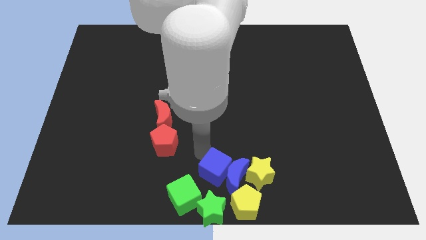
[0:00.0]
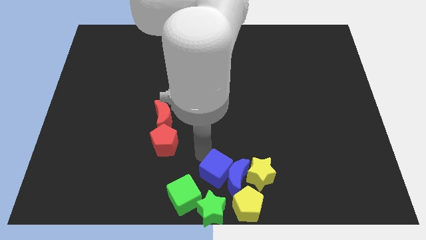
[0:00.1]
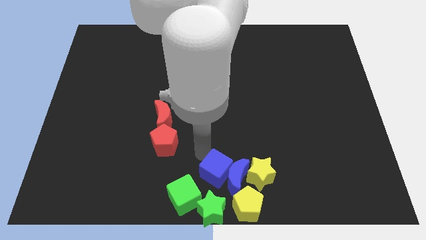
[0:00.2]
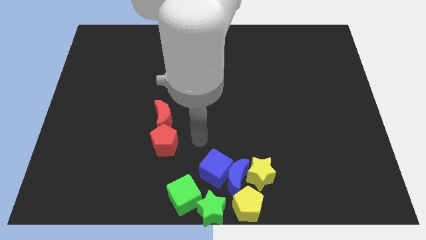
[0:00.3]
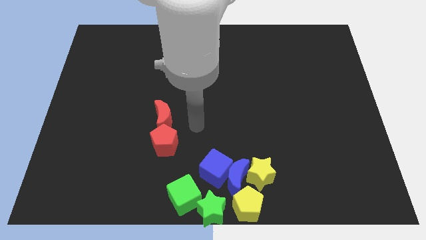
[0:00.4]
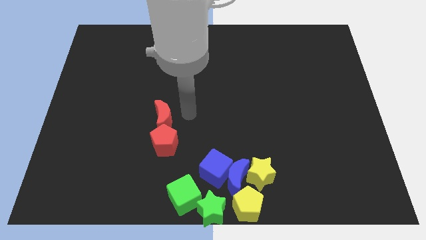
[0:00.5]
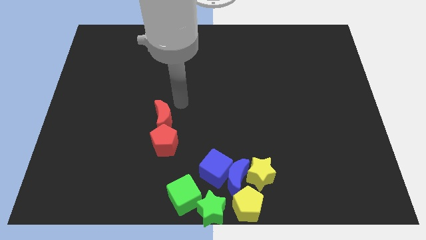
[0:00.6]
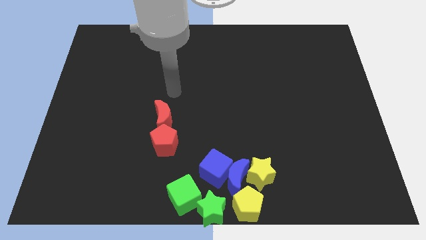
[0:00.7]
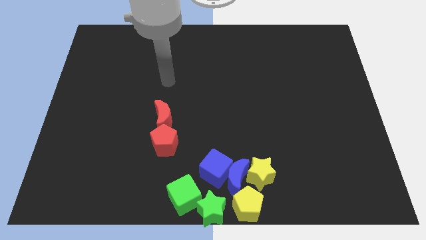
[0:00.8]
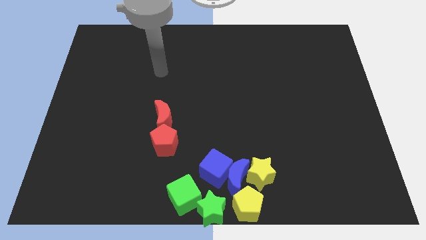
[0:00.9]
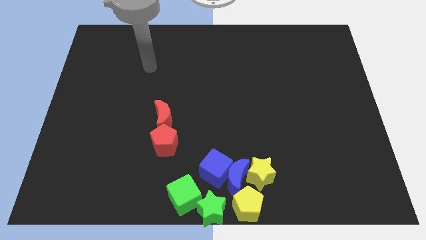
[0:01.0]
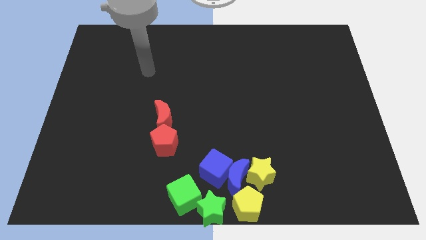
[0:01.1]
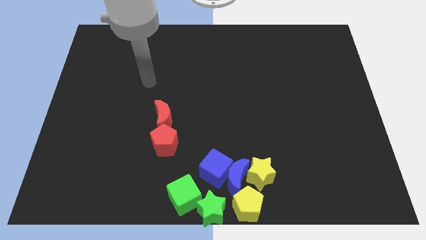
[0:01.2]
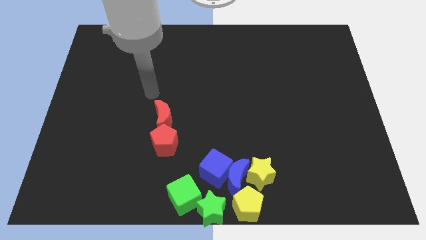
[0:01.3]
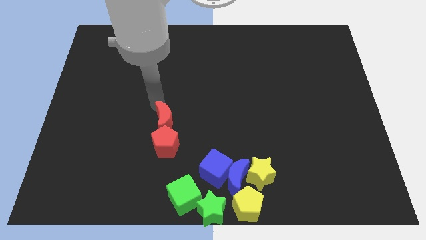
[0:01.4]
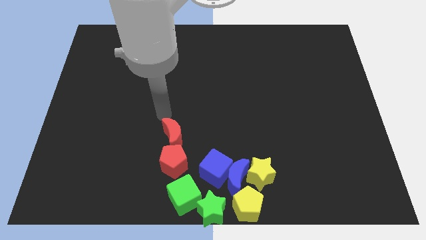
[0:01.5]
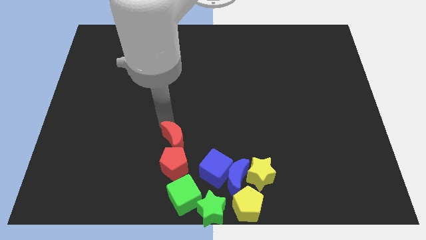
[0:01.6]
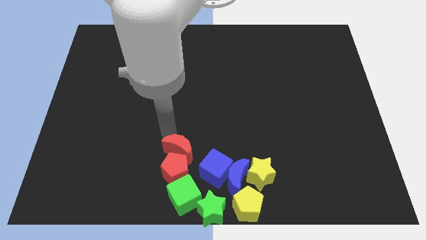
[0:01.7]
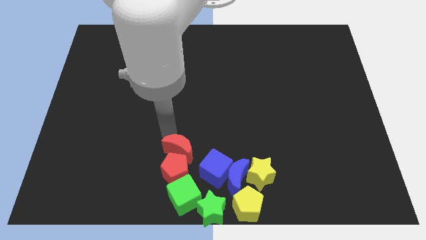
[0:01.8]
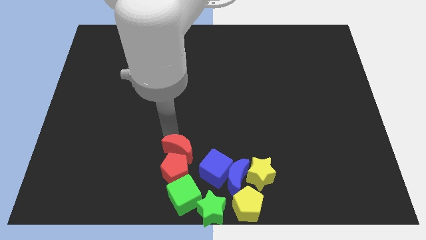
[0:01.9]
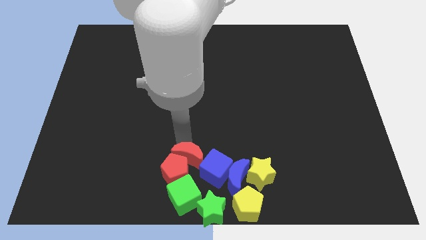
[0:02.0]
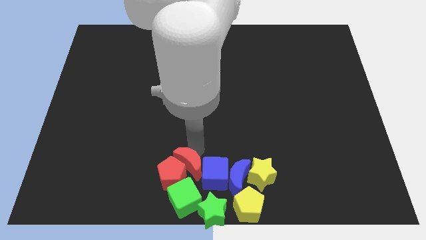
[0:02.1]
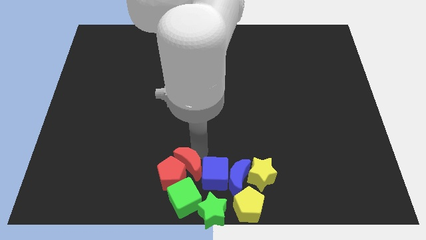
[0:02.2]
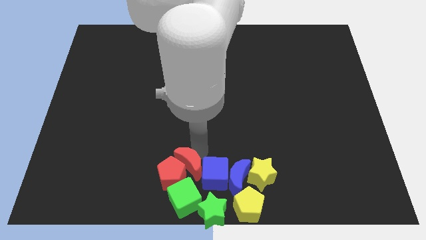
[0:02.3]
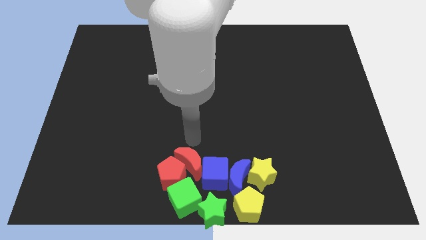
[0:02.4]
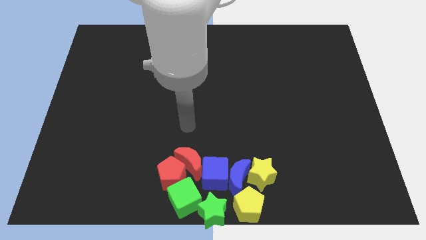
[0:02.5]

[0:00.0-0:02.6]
move the red blocks into a group of blocks

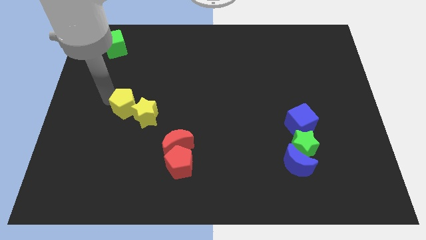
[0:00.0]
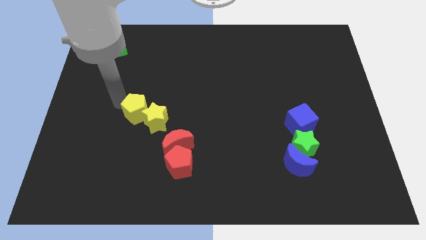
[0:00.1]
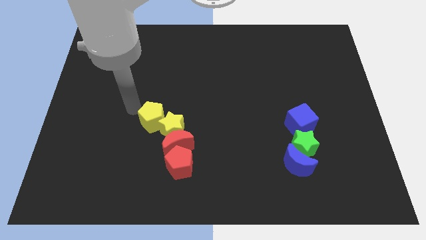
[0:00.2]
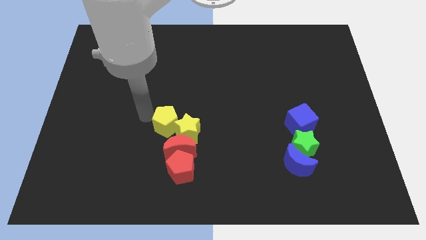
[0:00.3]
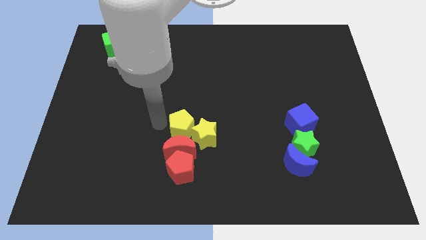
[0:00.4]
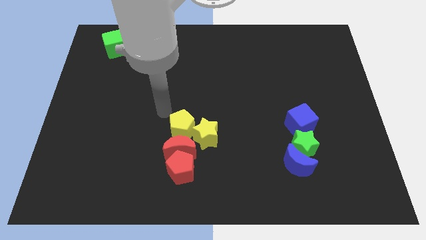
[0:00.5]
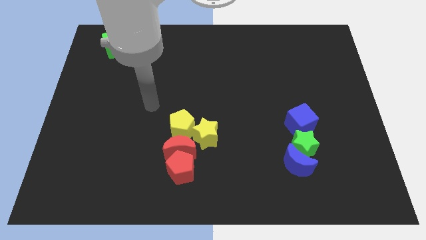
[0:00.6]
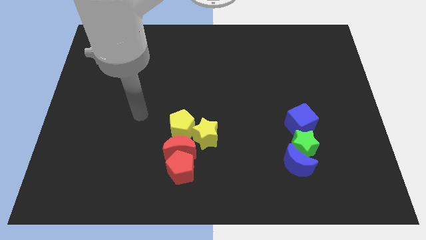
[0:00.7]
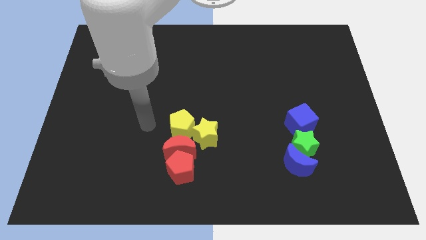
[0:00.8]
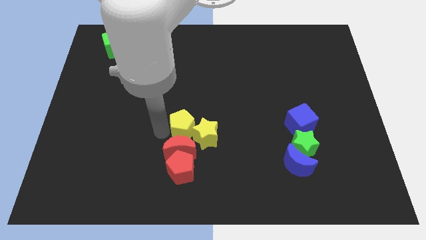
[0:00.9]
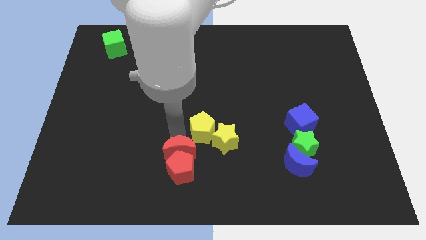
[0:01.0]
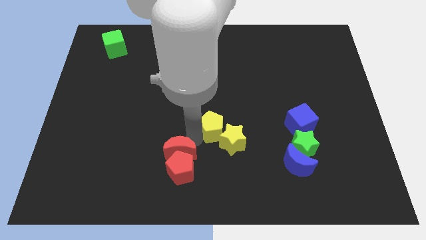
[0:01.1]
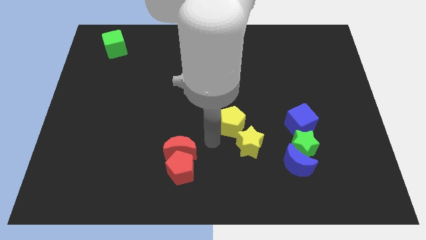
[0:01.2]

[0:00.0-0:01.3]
move the yellow blocks towards the blue moon

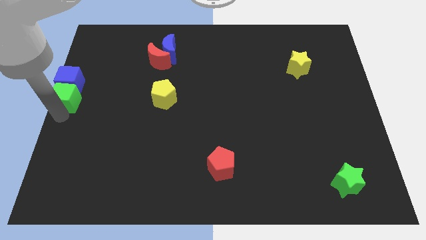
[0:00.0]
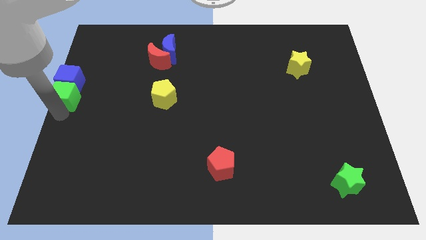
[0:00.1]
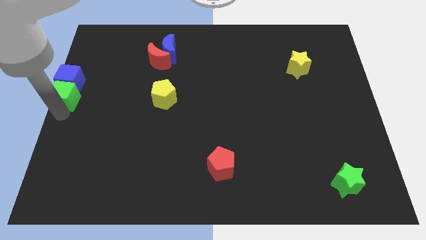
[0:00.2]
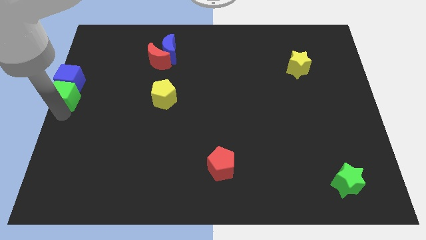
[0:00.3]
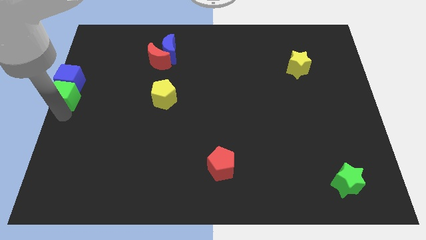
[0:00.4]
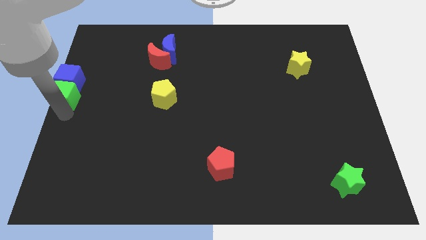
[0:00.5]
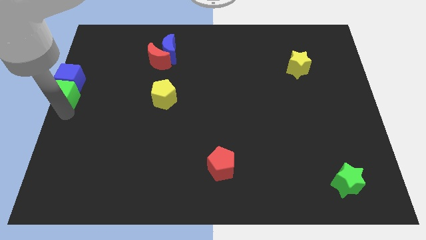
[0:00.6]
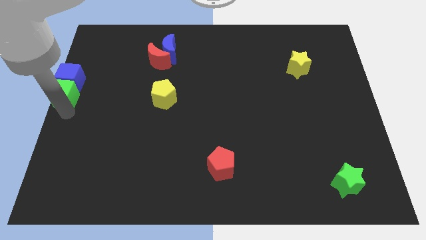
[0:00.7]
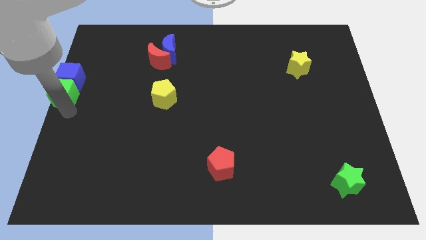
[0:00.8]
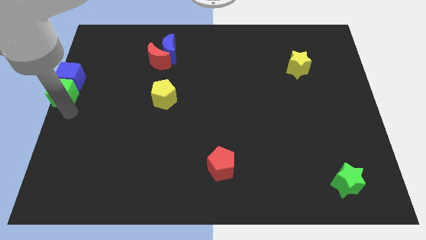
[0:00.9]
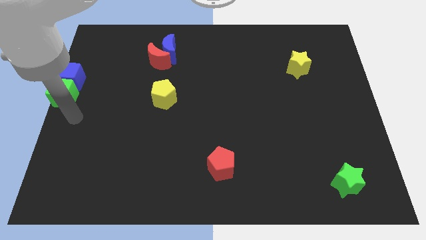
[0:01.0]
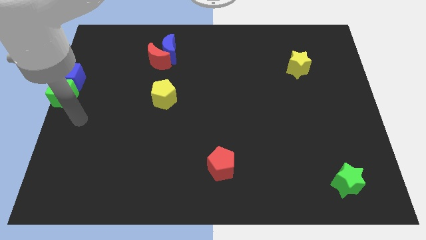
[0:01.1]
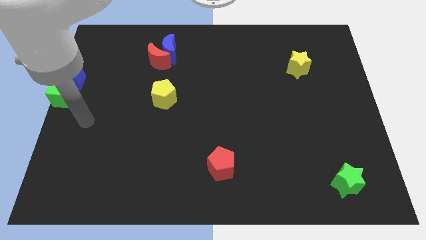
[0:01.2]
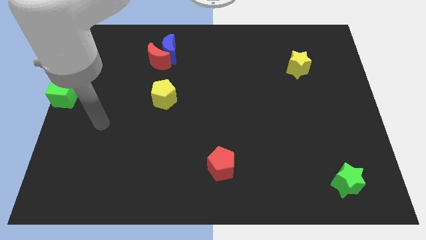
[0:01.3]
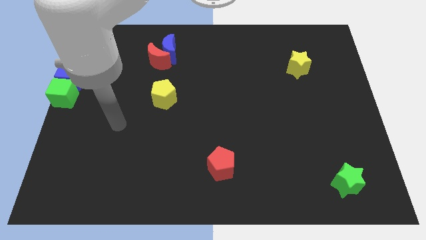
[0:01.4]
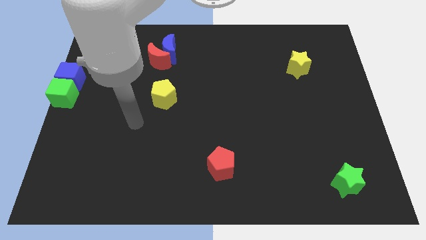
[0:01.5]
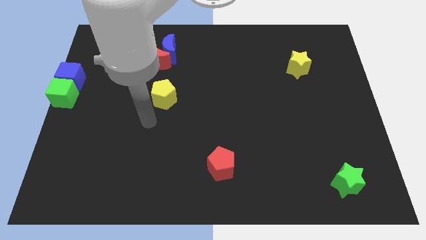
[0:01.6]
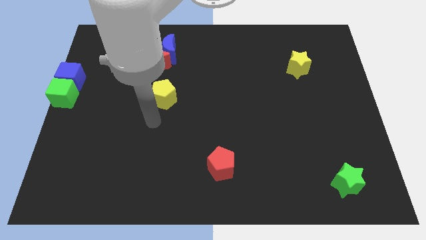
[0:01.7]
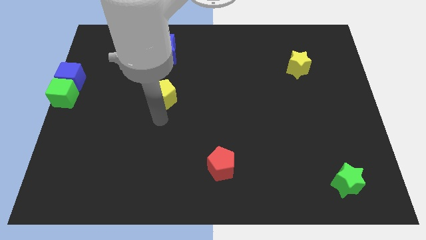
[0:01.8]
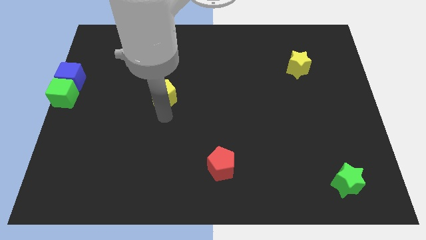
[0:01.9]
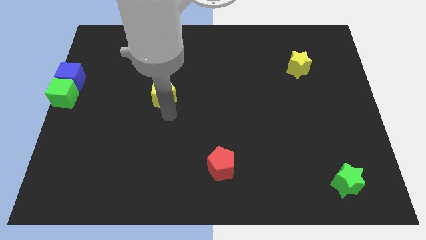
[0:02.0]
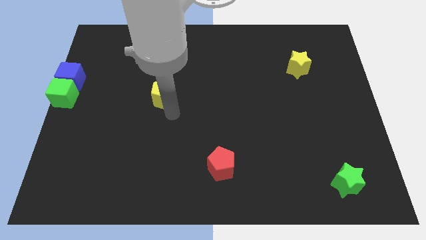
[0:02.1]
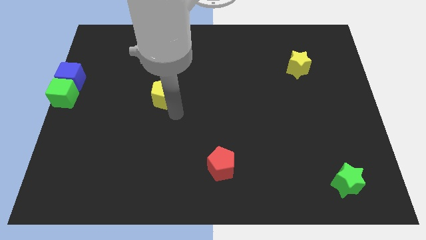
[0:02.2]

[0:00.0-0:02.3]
place your arm below yellow pentagon

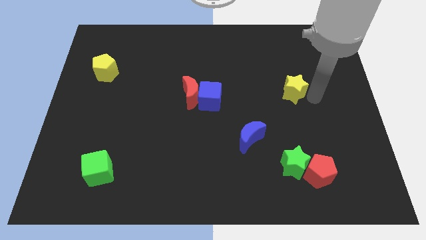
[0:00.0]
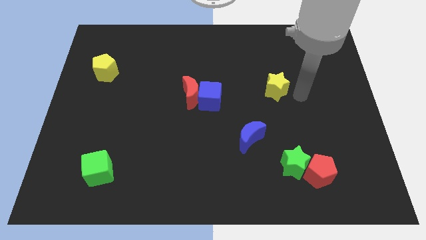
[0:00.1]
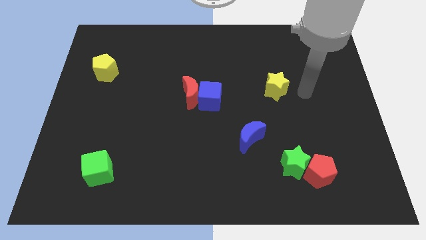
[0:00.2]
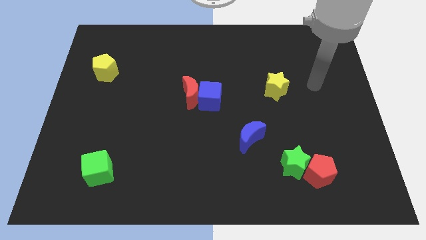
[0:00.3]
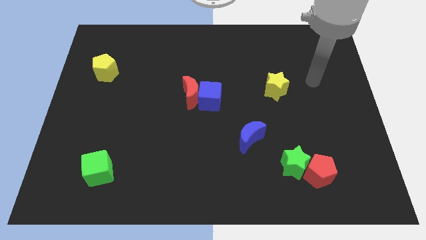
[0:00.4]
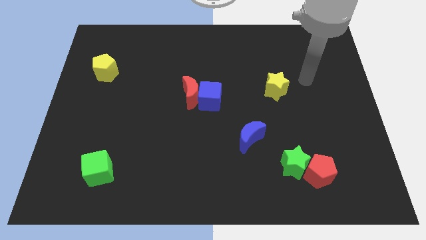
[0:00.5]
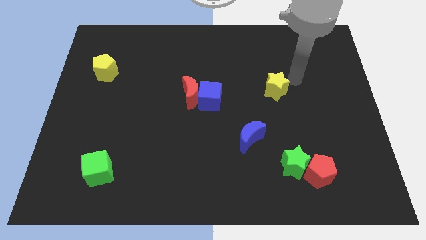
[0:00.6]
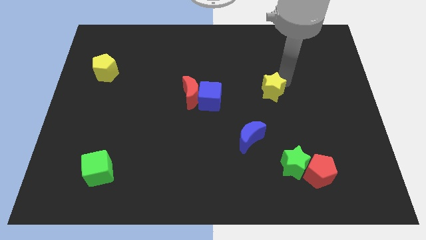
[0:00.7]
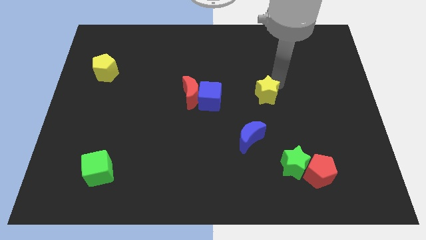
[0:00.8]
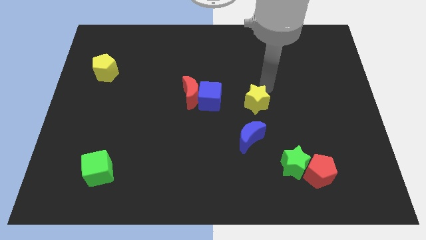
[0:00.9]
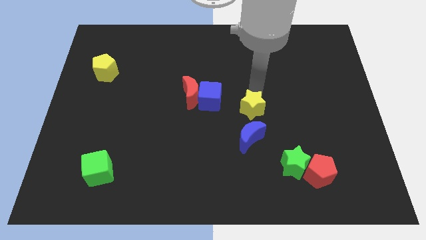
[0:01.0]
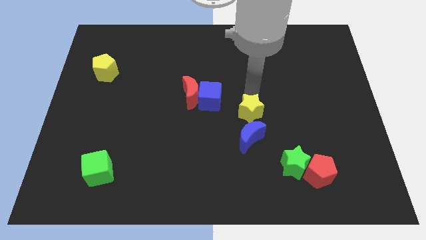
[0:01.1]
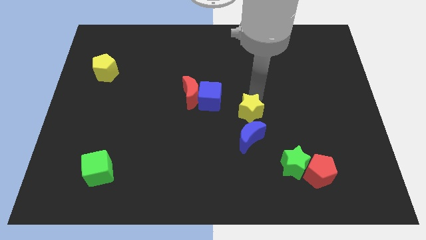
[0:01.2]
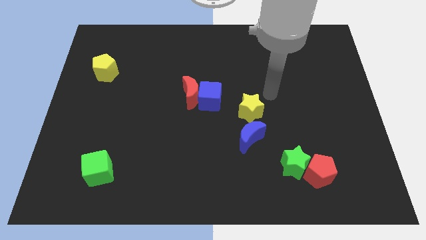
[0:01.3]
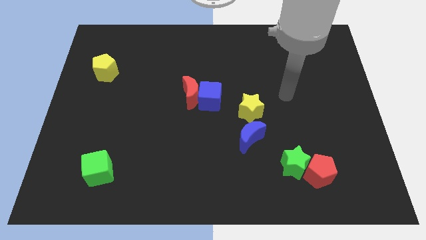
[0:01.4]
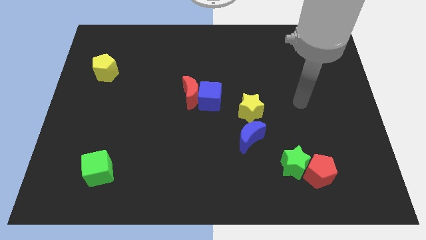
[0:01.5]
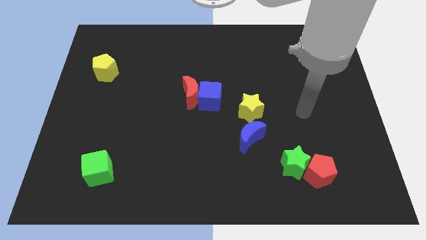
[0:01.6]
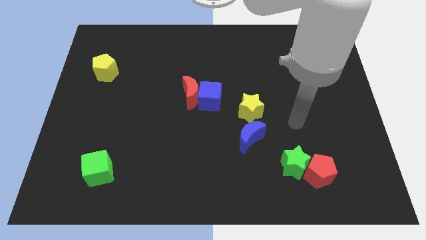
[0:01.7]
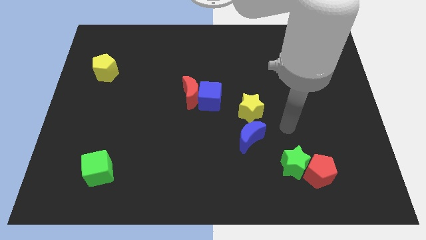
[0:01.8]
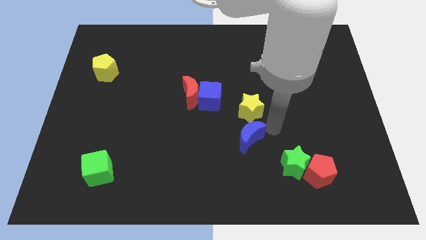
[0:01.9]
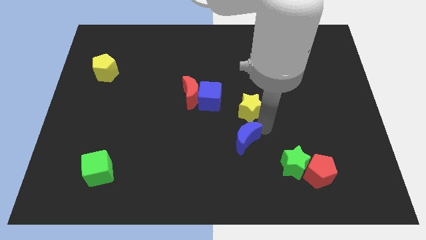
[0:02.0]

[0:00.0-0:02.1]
slide yellow star close to blue moon

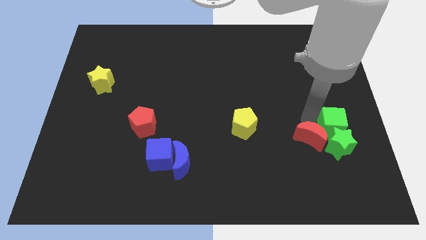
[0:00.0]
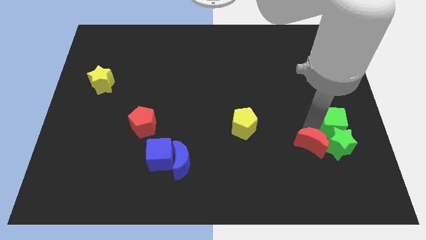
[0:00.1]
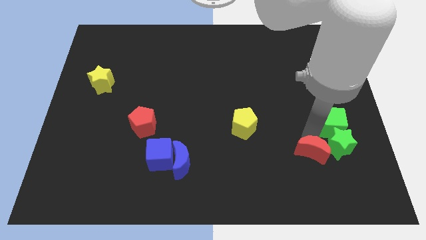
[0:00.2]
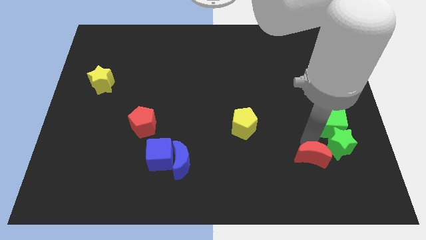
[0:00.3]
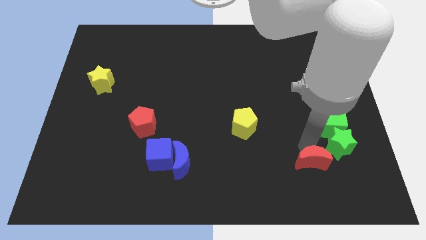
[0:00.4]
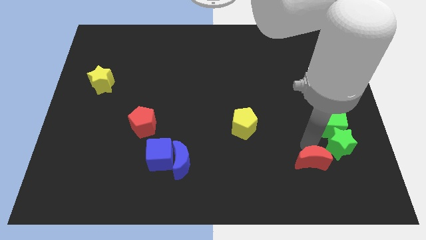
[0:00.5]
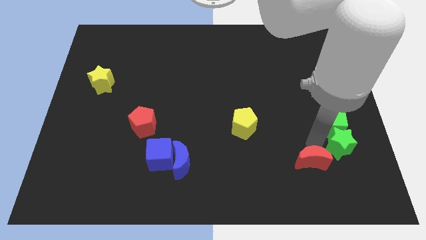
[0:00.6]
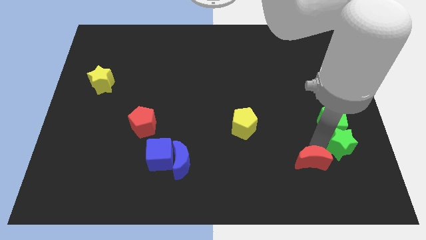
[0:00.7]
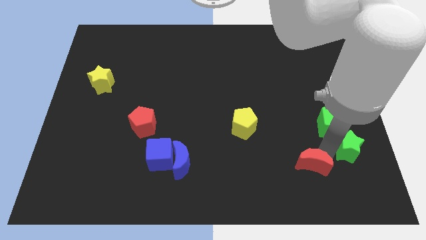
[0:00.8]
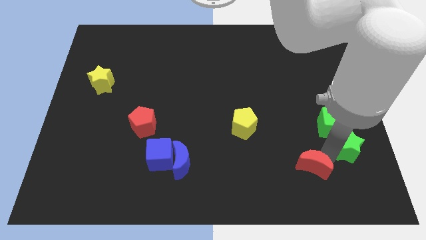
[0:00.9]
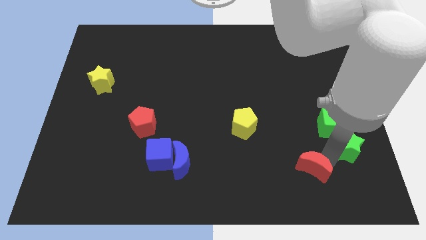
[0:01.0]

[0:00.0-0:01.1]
separate red crescent from green cube
